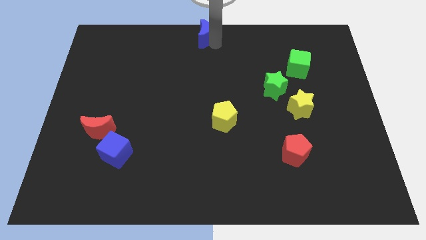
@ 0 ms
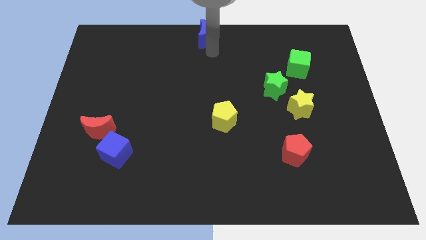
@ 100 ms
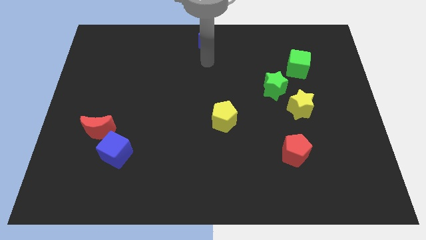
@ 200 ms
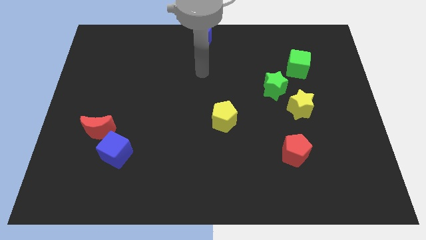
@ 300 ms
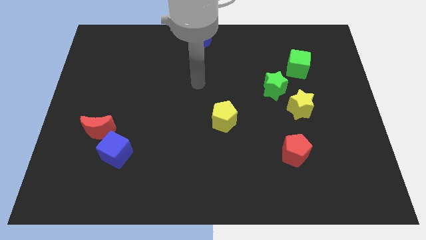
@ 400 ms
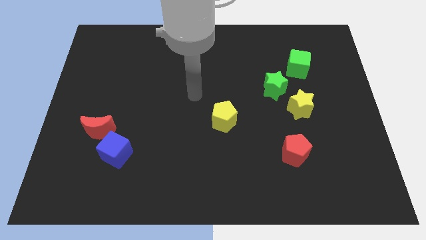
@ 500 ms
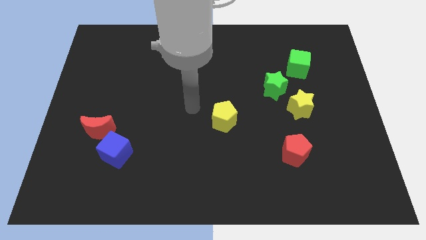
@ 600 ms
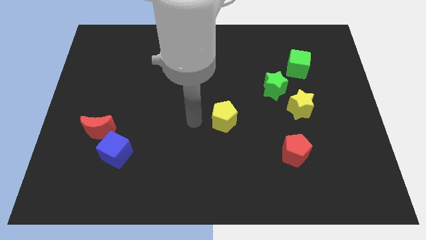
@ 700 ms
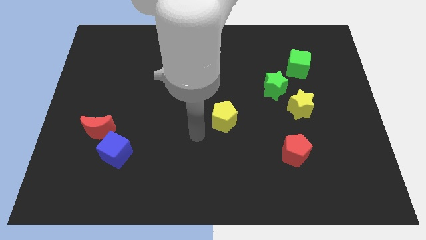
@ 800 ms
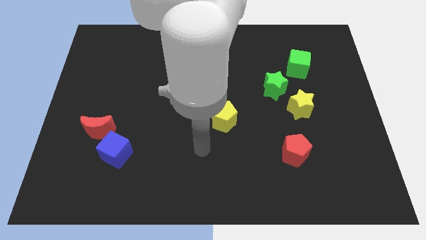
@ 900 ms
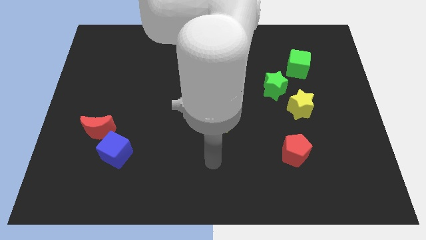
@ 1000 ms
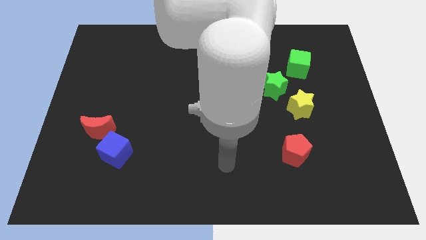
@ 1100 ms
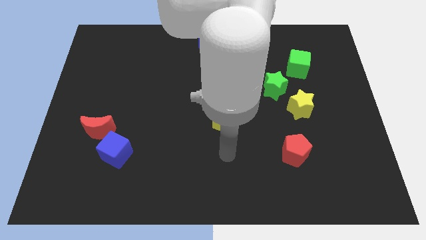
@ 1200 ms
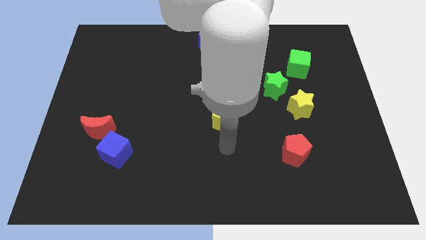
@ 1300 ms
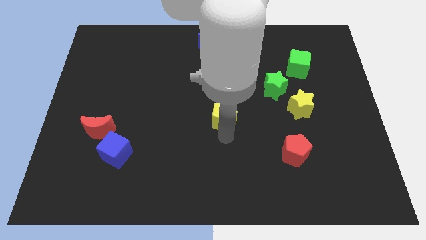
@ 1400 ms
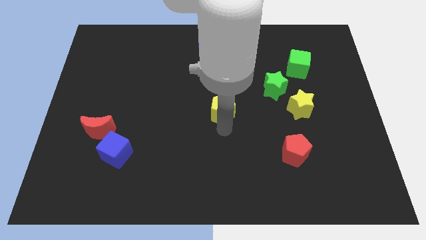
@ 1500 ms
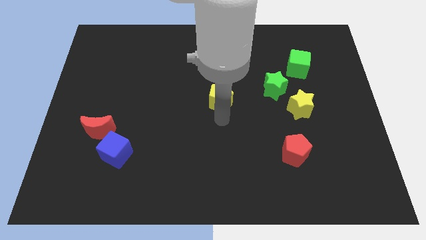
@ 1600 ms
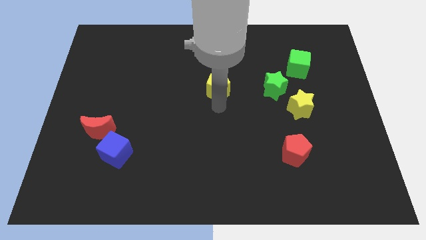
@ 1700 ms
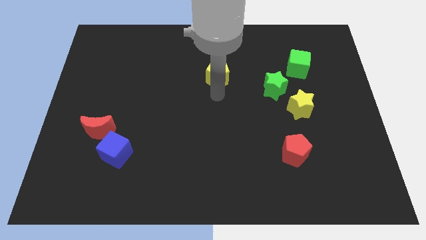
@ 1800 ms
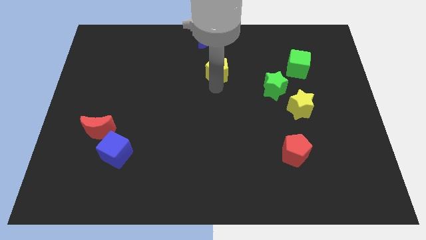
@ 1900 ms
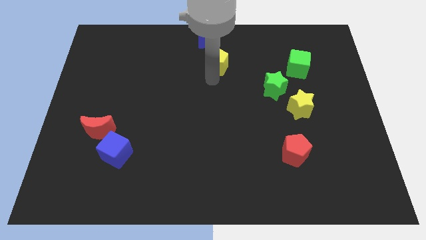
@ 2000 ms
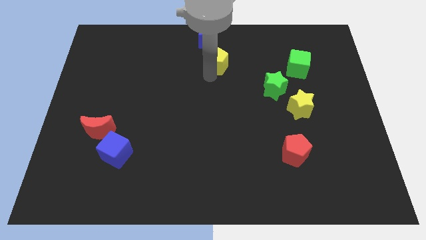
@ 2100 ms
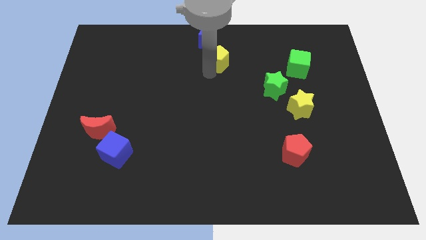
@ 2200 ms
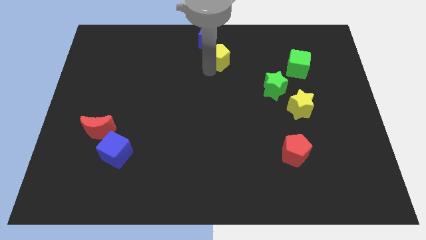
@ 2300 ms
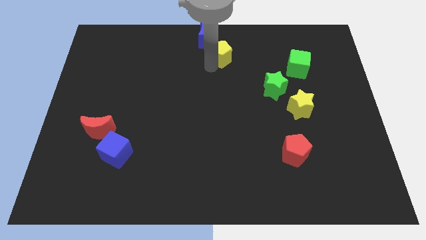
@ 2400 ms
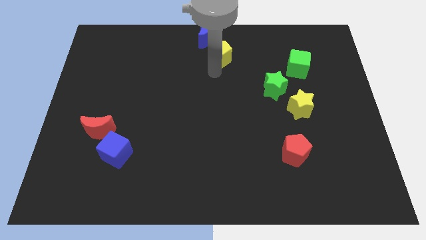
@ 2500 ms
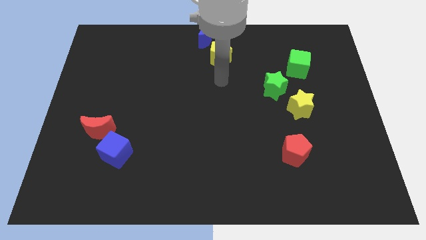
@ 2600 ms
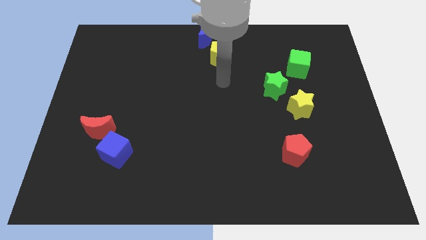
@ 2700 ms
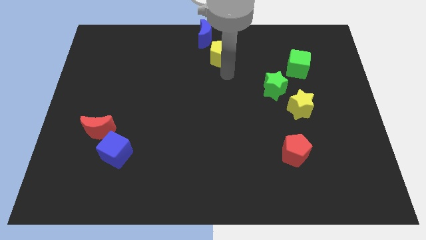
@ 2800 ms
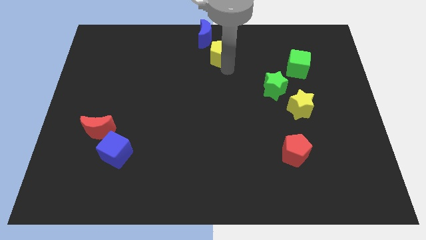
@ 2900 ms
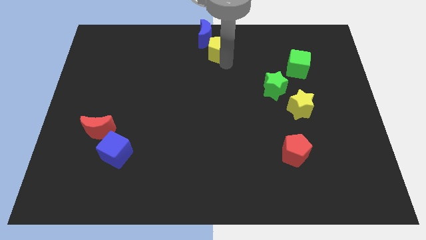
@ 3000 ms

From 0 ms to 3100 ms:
move yellow pentagon towards blue moon

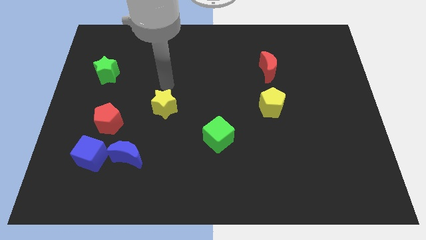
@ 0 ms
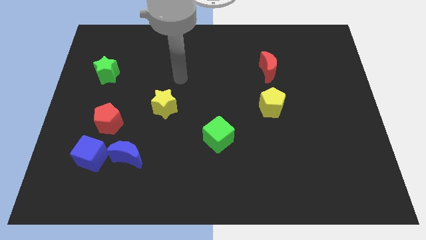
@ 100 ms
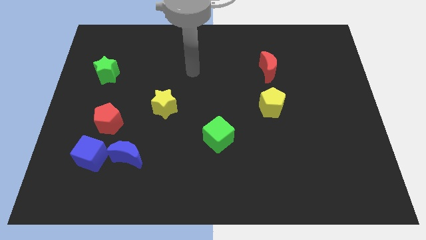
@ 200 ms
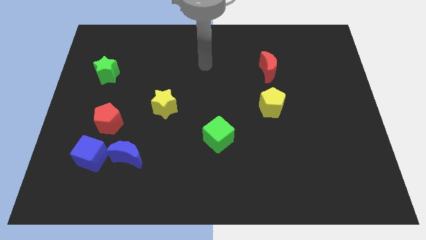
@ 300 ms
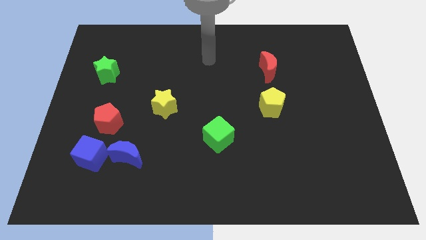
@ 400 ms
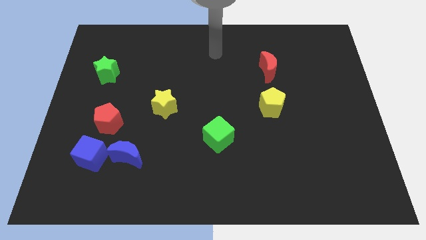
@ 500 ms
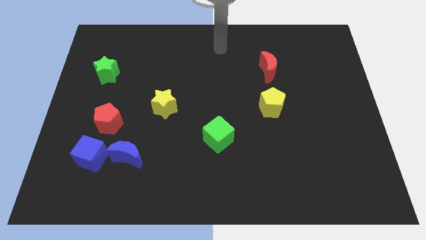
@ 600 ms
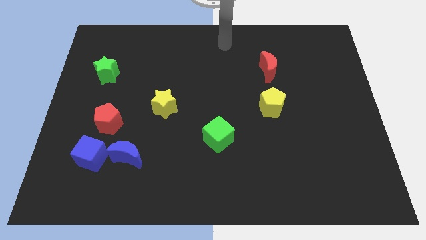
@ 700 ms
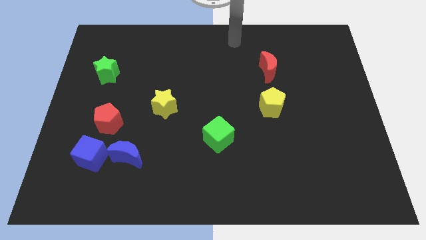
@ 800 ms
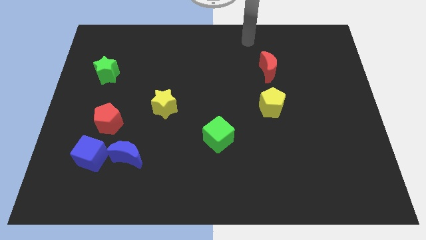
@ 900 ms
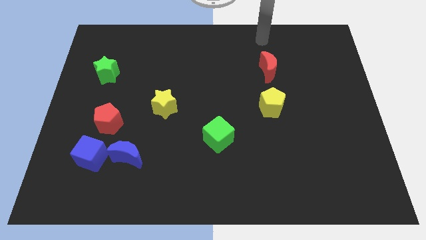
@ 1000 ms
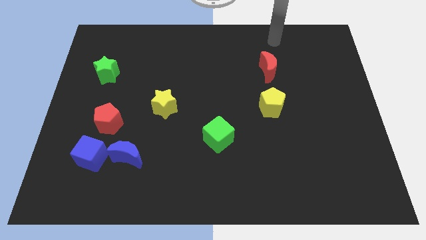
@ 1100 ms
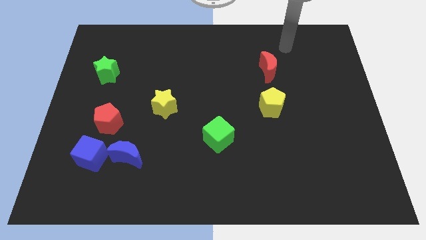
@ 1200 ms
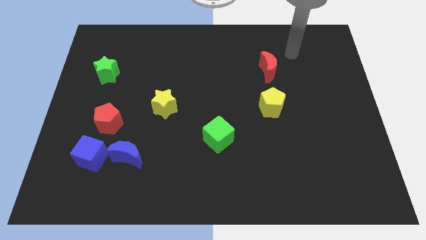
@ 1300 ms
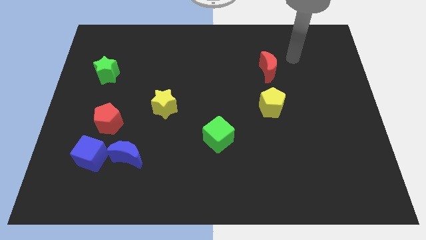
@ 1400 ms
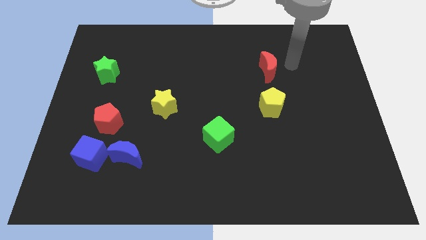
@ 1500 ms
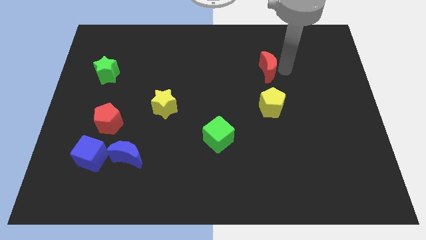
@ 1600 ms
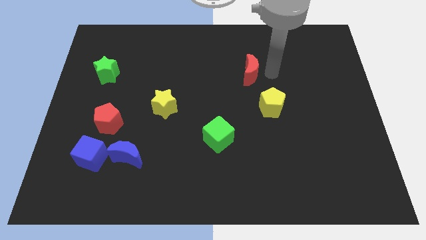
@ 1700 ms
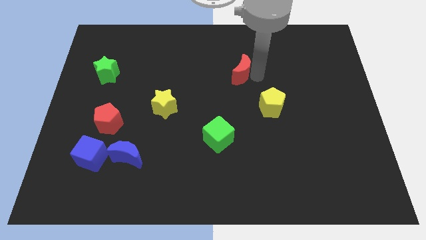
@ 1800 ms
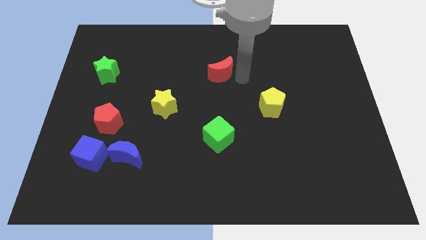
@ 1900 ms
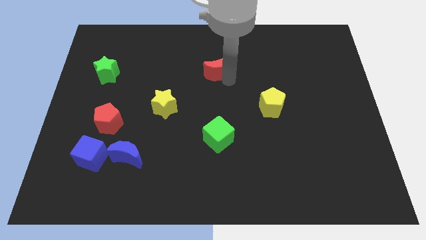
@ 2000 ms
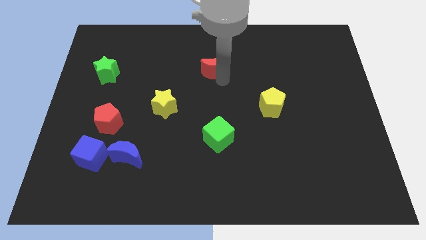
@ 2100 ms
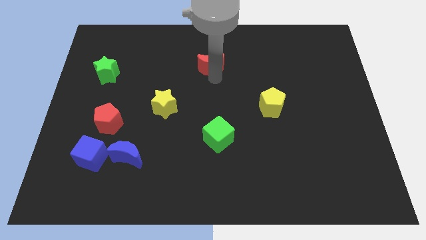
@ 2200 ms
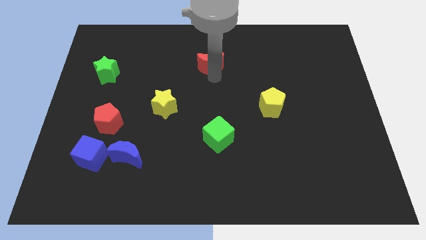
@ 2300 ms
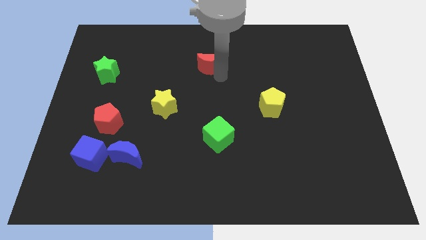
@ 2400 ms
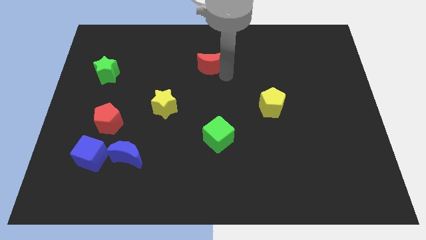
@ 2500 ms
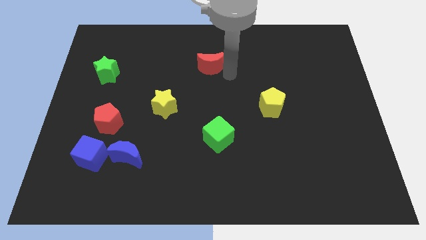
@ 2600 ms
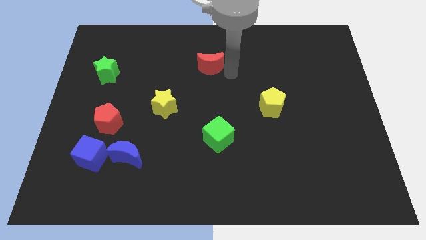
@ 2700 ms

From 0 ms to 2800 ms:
move the red crescent diagonal to the yellow pentagon

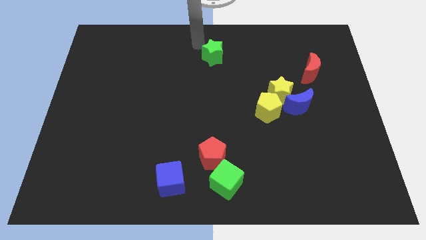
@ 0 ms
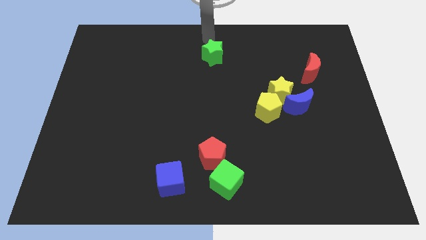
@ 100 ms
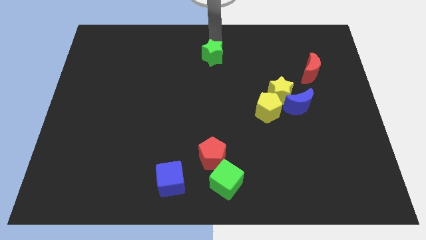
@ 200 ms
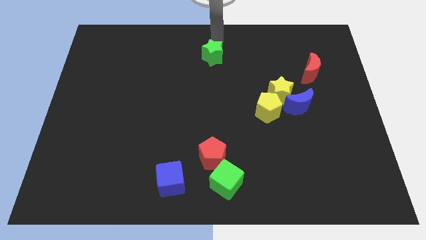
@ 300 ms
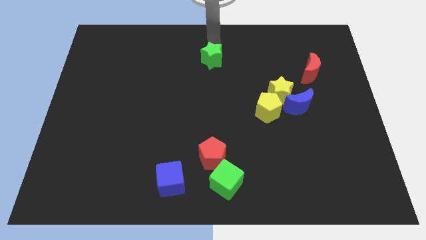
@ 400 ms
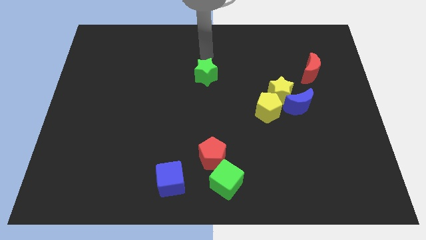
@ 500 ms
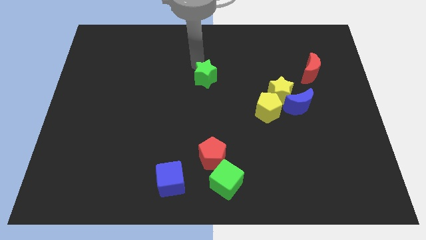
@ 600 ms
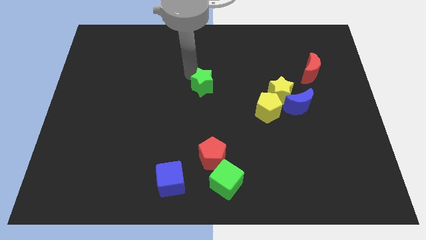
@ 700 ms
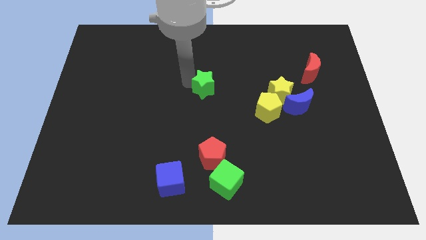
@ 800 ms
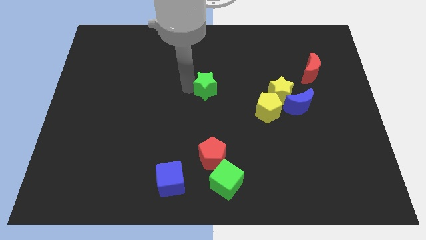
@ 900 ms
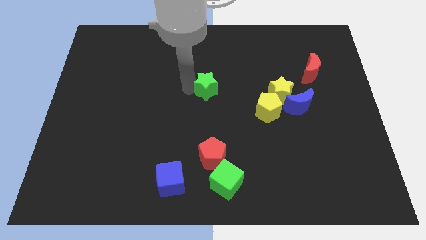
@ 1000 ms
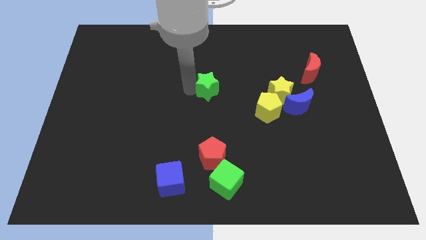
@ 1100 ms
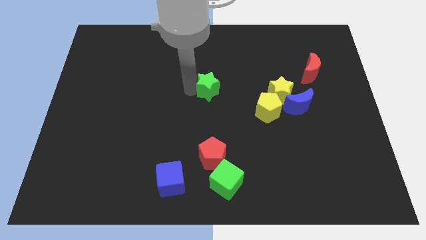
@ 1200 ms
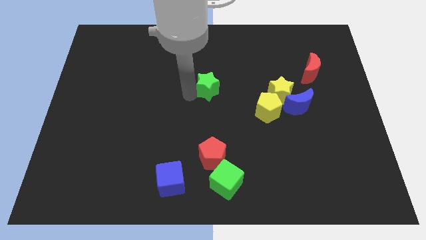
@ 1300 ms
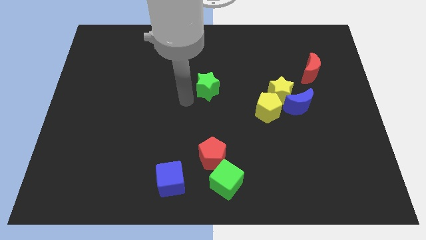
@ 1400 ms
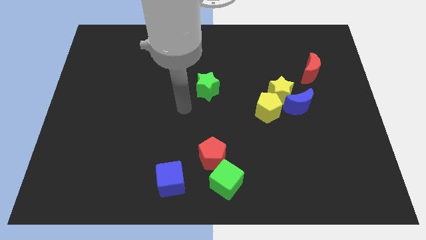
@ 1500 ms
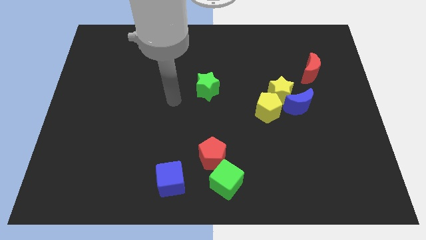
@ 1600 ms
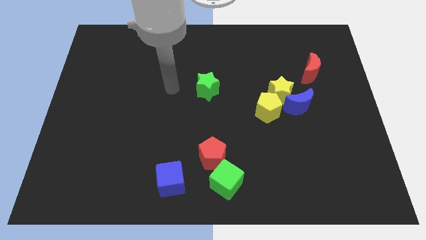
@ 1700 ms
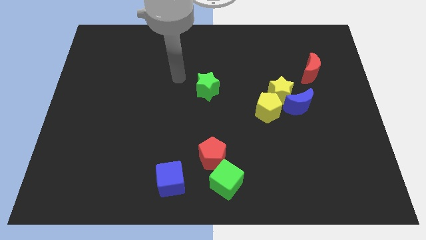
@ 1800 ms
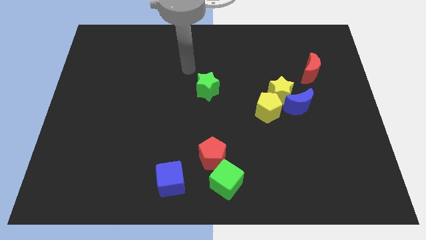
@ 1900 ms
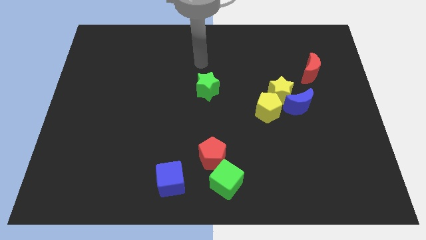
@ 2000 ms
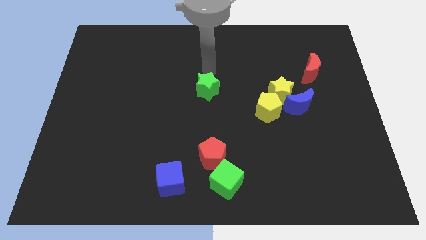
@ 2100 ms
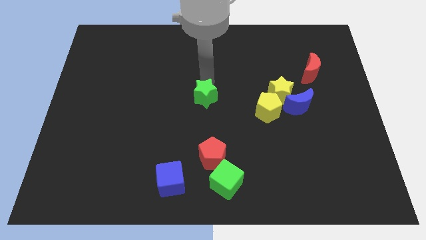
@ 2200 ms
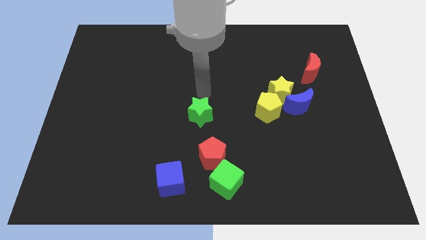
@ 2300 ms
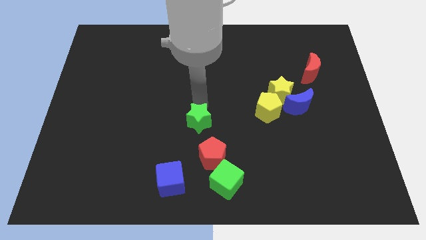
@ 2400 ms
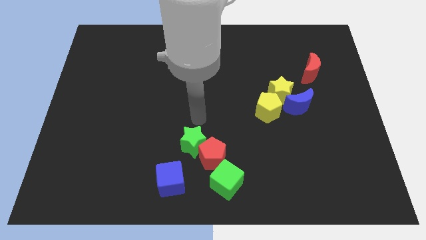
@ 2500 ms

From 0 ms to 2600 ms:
push green star in to red pentagon

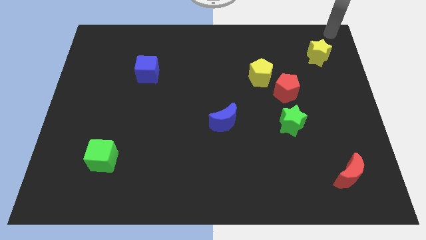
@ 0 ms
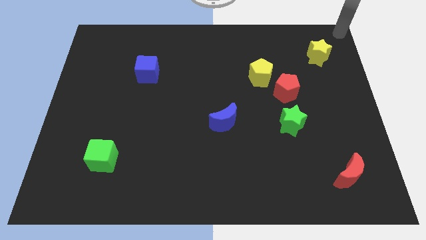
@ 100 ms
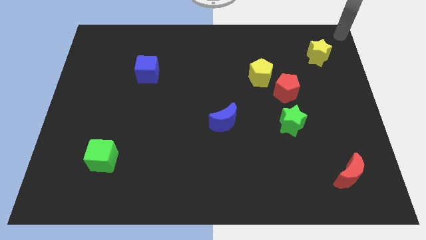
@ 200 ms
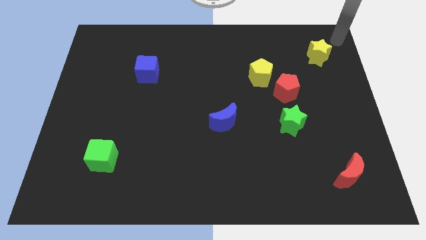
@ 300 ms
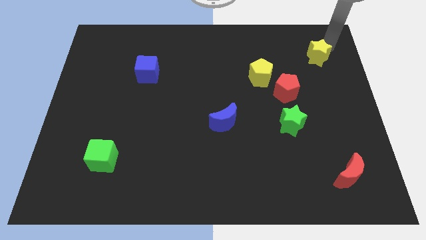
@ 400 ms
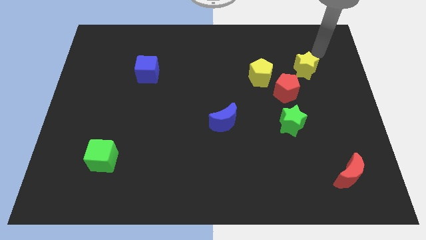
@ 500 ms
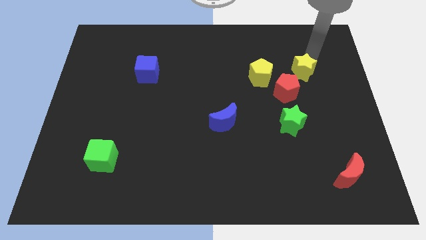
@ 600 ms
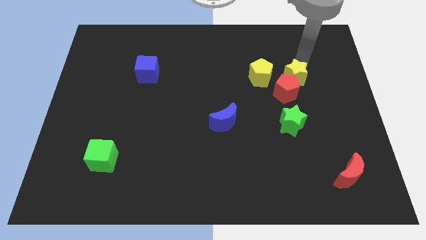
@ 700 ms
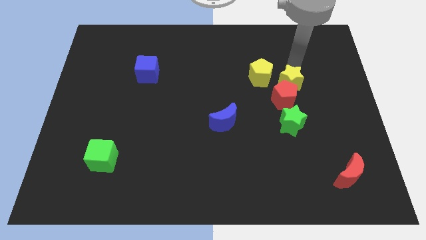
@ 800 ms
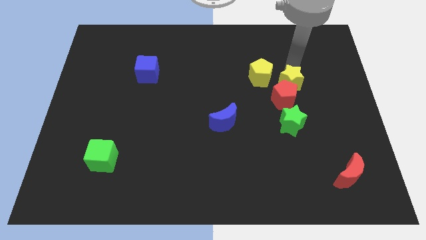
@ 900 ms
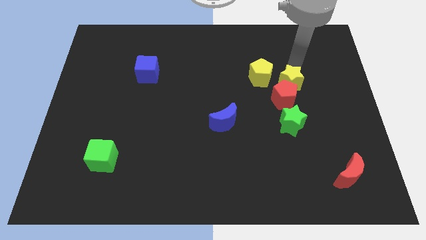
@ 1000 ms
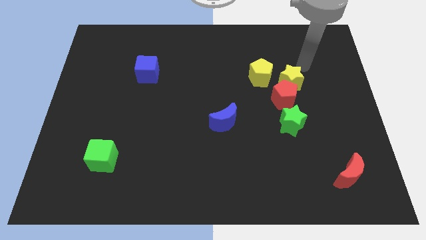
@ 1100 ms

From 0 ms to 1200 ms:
push the yellow star into the red pentagon
